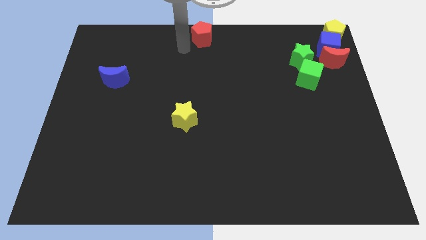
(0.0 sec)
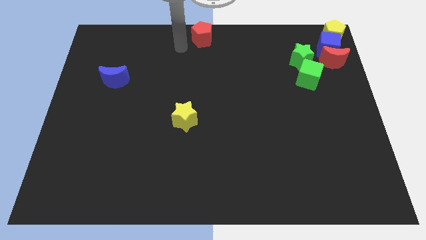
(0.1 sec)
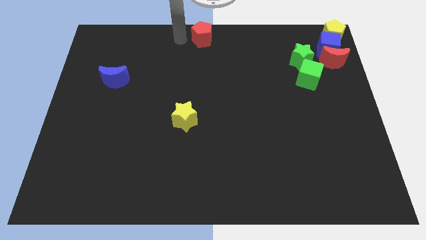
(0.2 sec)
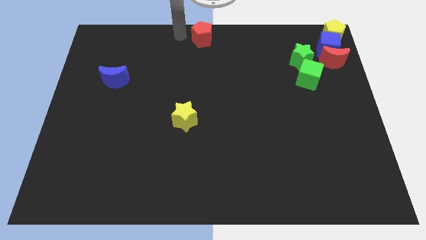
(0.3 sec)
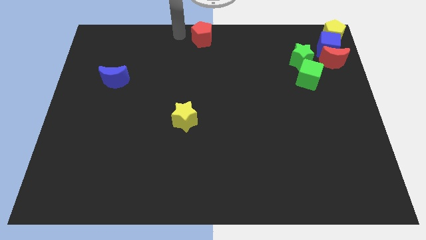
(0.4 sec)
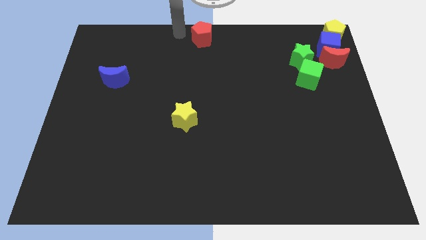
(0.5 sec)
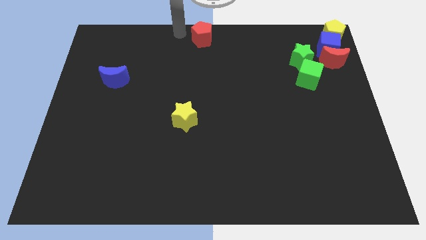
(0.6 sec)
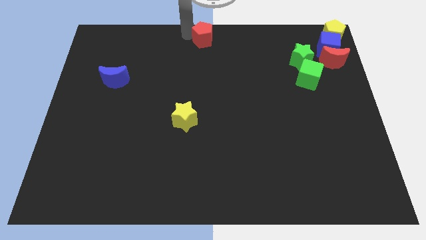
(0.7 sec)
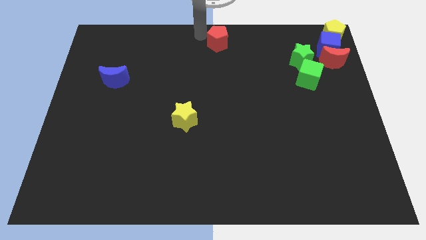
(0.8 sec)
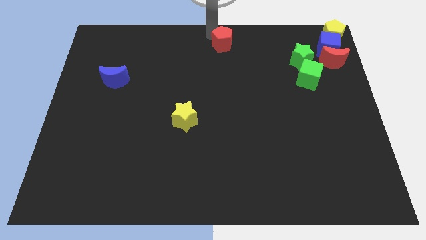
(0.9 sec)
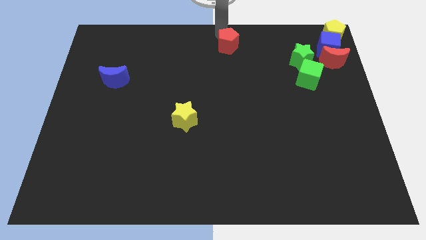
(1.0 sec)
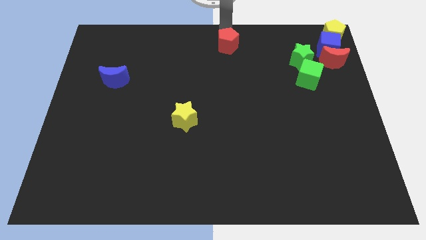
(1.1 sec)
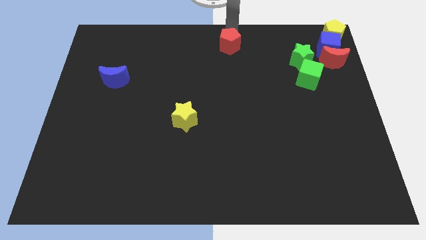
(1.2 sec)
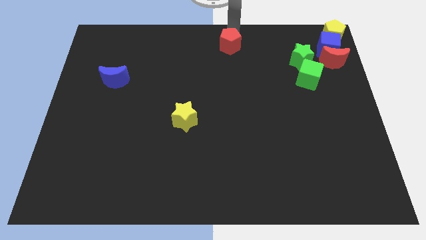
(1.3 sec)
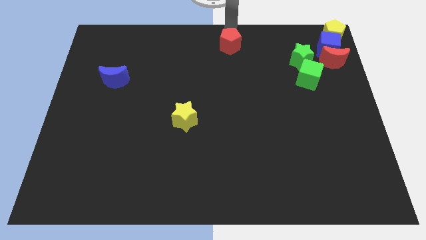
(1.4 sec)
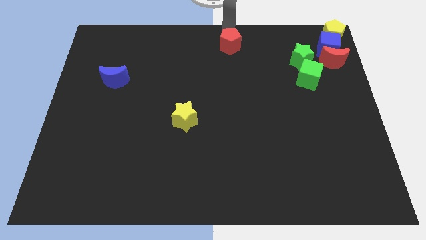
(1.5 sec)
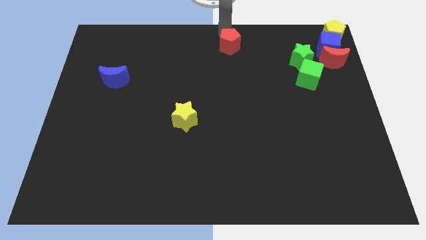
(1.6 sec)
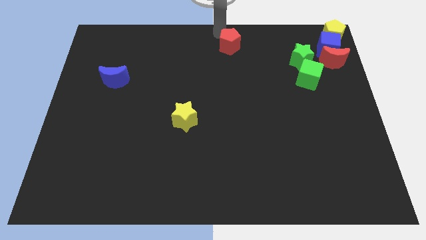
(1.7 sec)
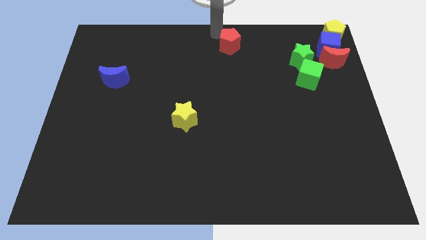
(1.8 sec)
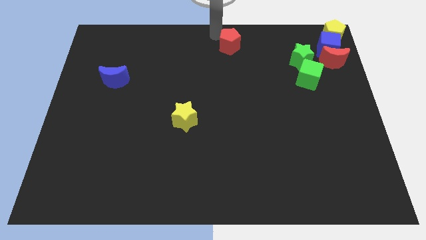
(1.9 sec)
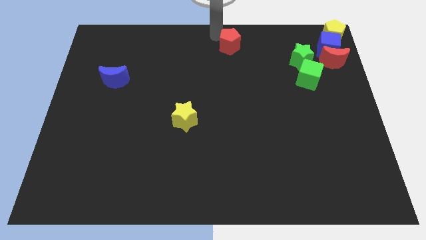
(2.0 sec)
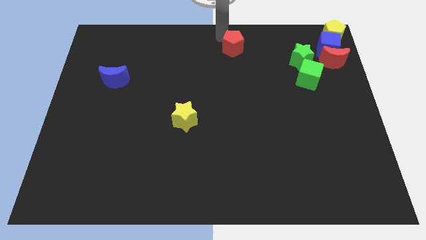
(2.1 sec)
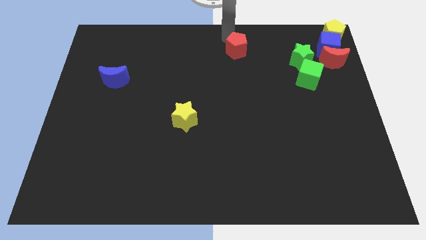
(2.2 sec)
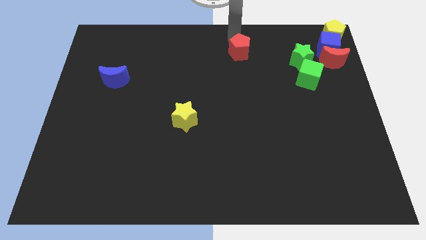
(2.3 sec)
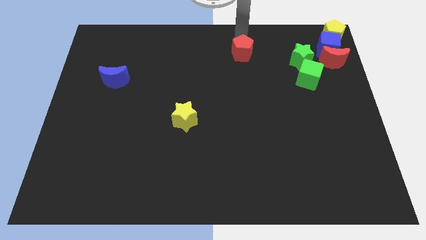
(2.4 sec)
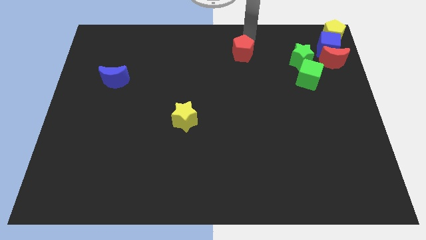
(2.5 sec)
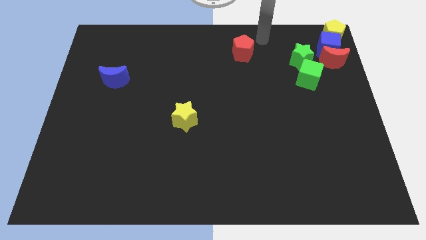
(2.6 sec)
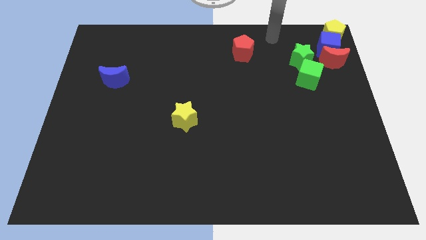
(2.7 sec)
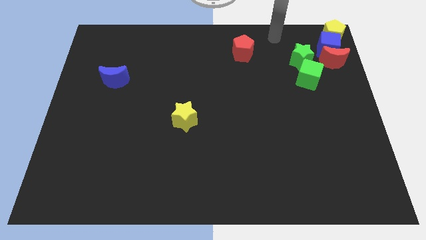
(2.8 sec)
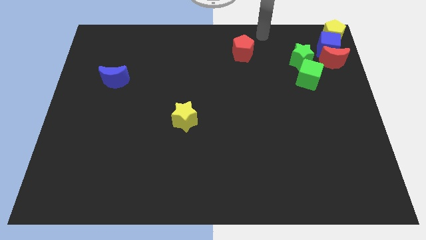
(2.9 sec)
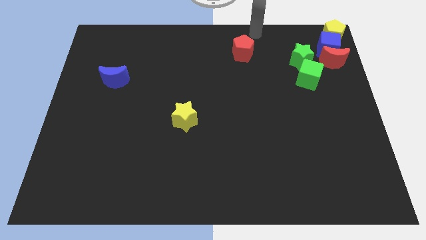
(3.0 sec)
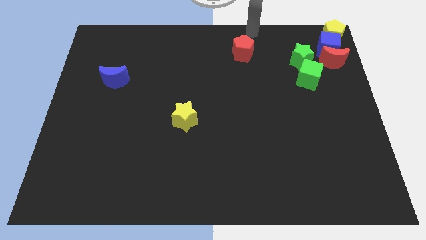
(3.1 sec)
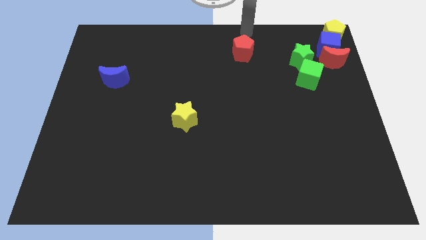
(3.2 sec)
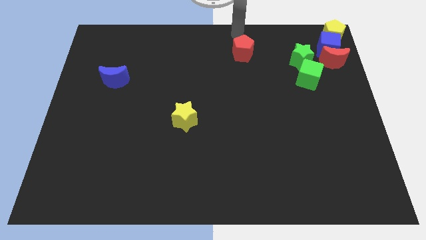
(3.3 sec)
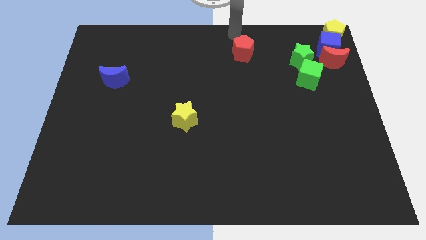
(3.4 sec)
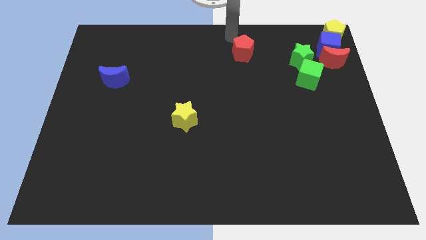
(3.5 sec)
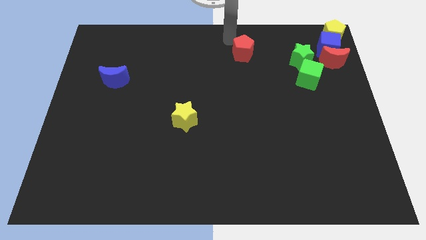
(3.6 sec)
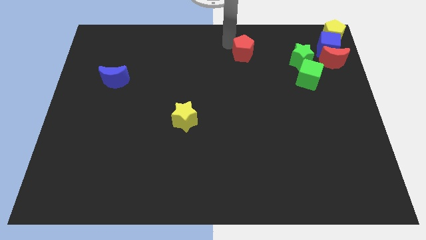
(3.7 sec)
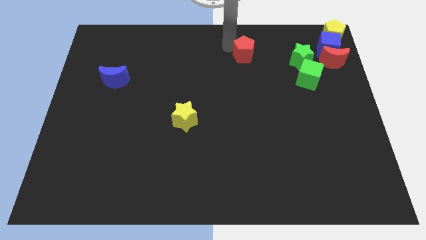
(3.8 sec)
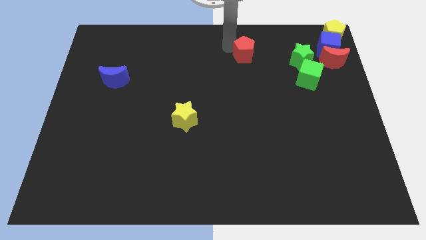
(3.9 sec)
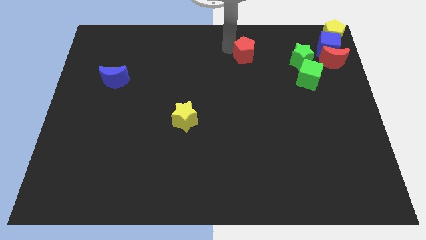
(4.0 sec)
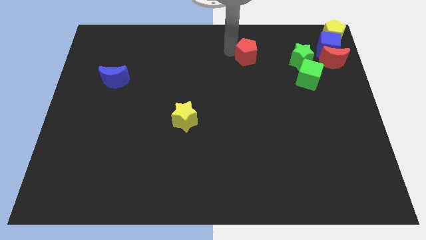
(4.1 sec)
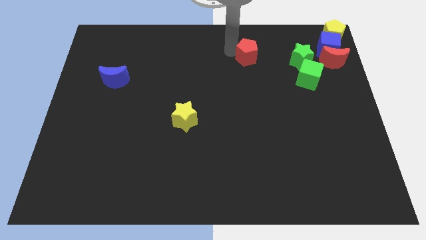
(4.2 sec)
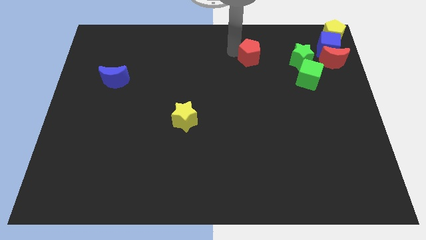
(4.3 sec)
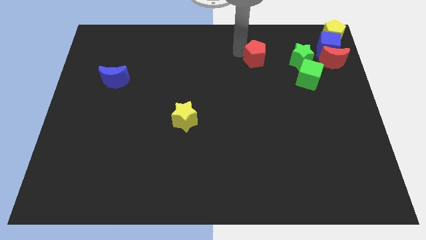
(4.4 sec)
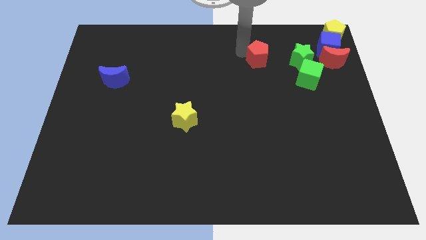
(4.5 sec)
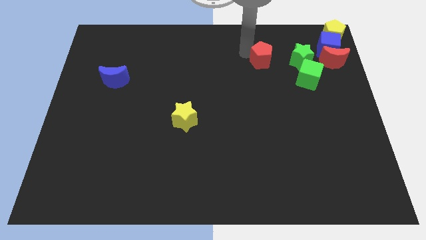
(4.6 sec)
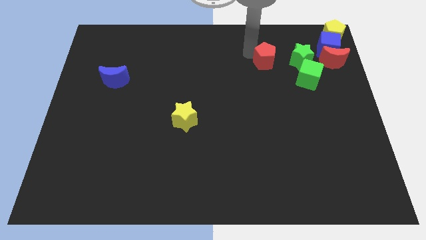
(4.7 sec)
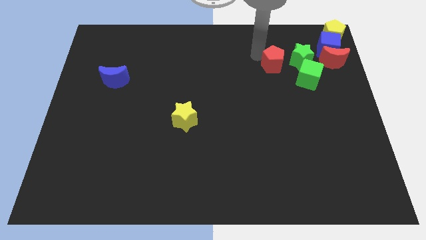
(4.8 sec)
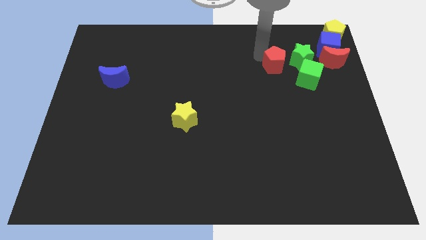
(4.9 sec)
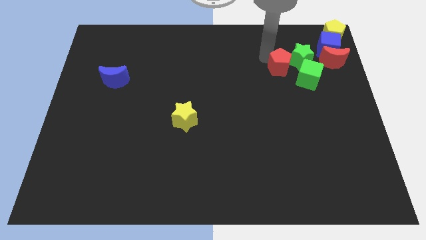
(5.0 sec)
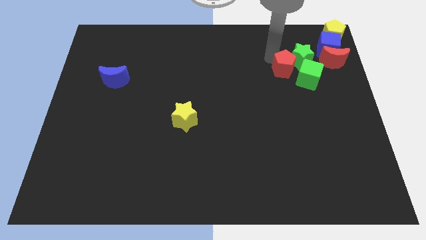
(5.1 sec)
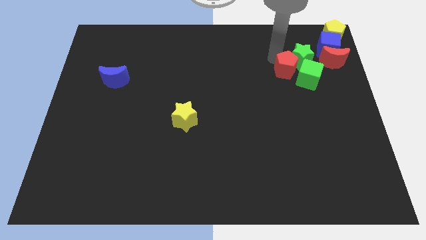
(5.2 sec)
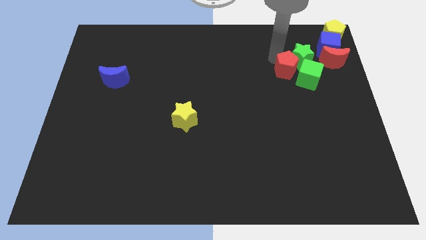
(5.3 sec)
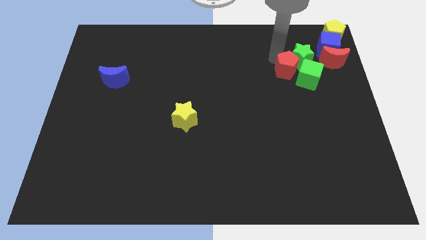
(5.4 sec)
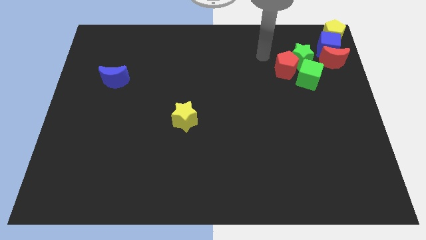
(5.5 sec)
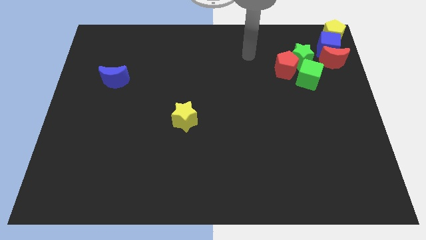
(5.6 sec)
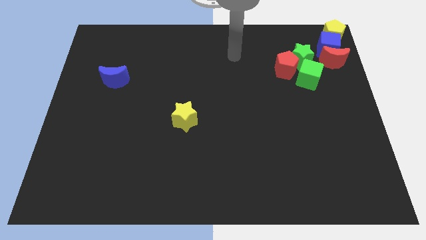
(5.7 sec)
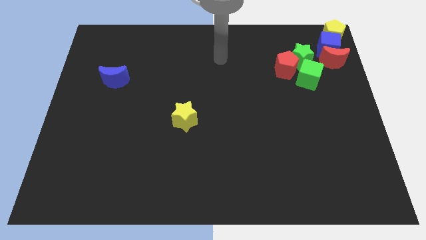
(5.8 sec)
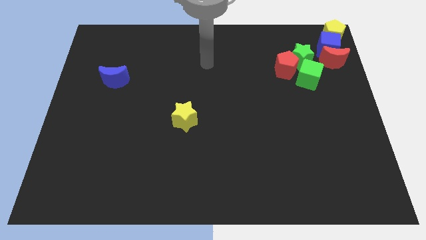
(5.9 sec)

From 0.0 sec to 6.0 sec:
push the red pentagon into the green blocks

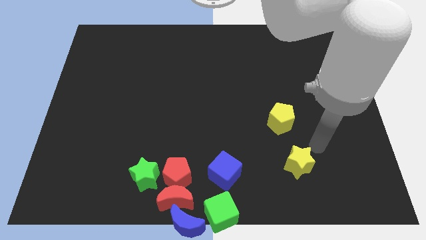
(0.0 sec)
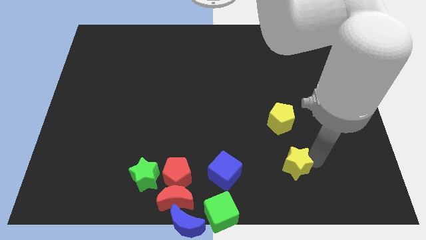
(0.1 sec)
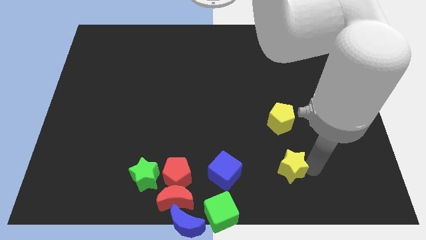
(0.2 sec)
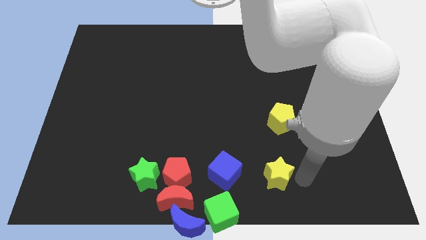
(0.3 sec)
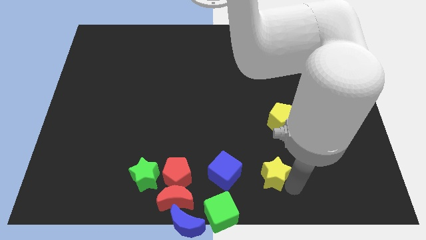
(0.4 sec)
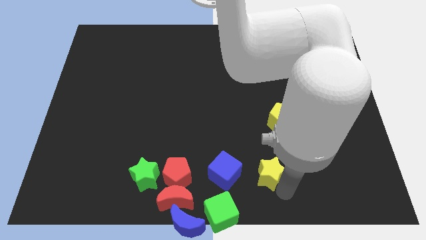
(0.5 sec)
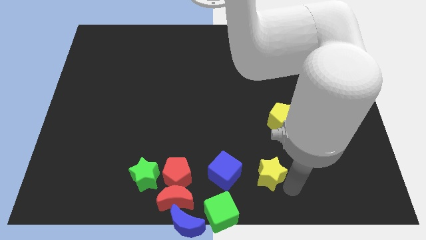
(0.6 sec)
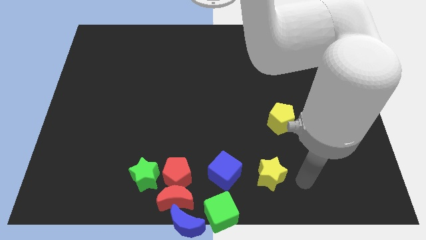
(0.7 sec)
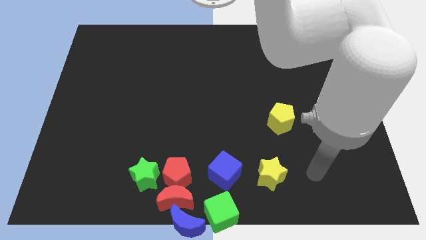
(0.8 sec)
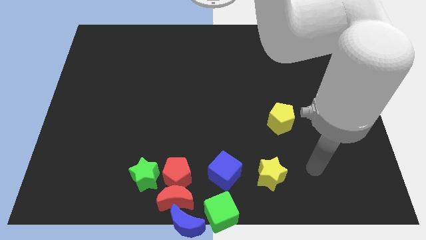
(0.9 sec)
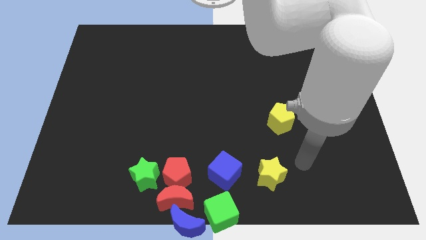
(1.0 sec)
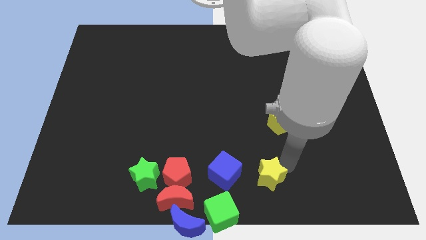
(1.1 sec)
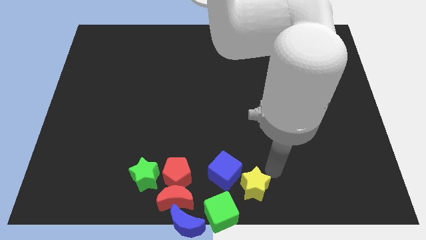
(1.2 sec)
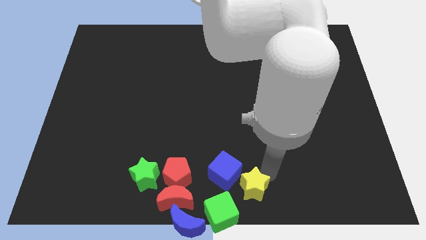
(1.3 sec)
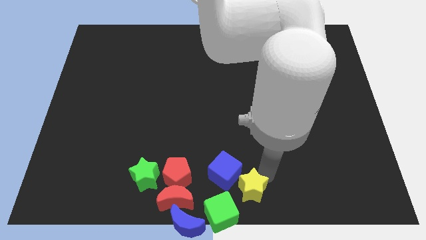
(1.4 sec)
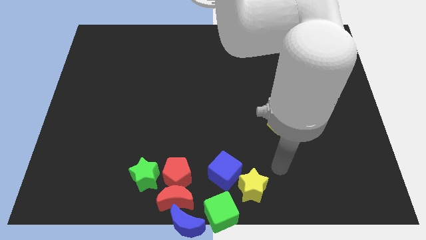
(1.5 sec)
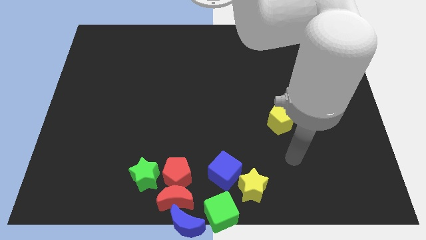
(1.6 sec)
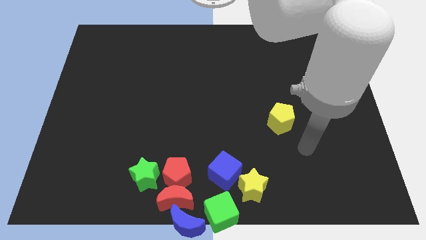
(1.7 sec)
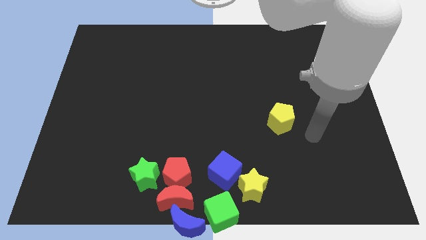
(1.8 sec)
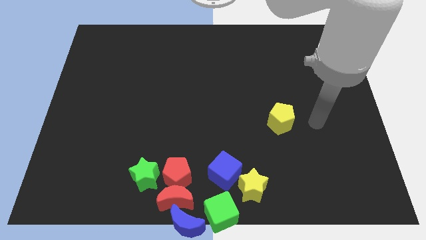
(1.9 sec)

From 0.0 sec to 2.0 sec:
push the yellow star towards the bottom center

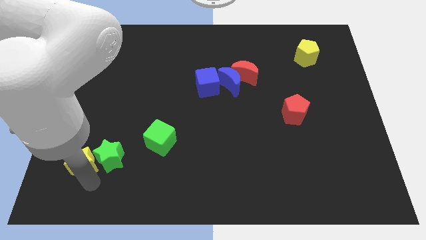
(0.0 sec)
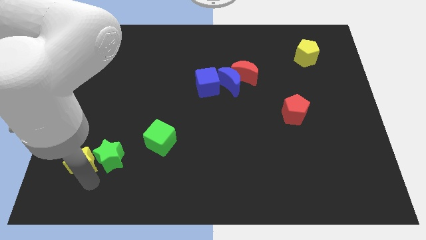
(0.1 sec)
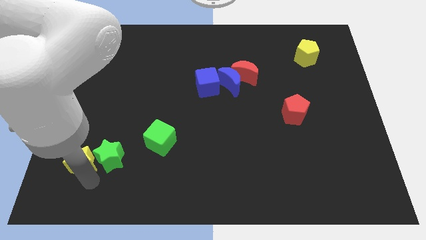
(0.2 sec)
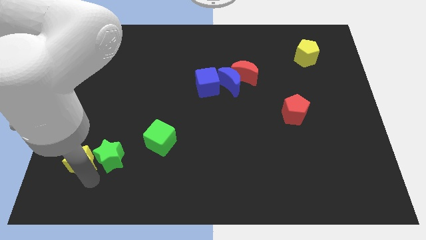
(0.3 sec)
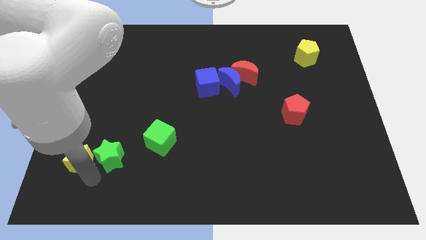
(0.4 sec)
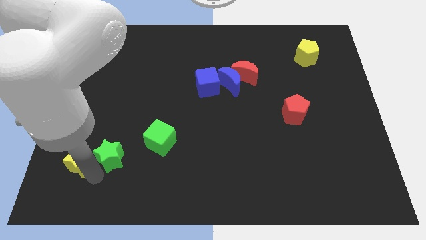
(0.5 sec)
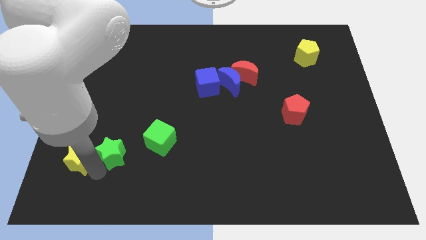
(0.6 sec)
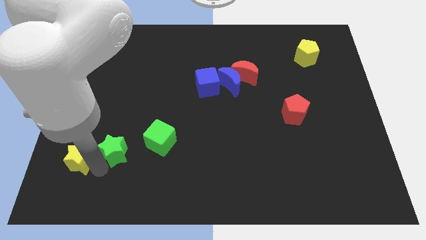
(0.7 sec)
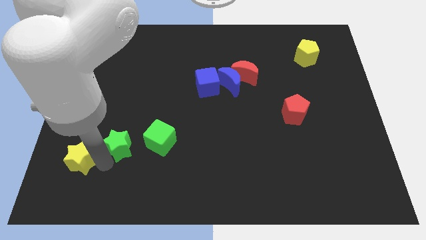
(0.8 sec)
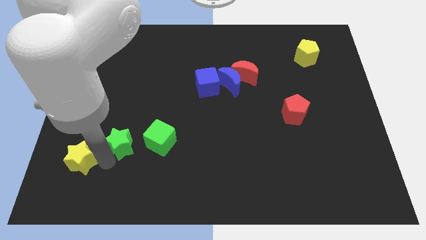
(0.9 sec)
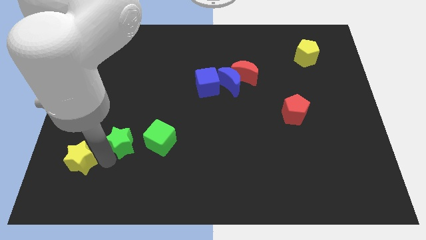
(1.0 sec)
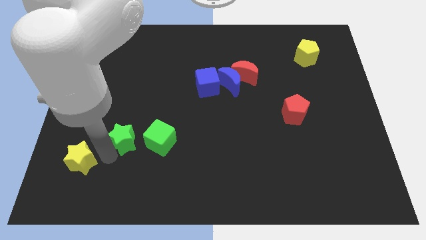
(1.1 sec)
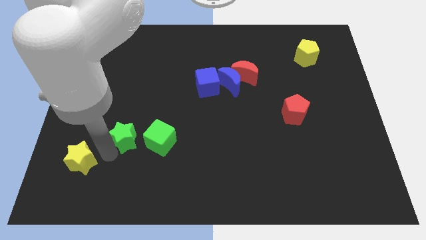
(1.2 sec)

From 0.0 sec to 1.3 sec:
place the green star left to the green cube
